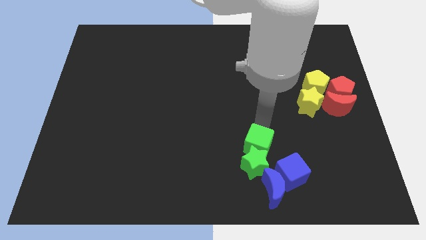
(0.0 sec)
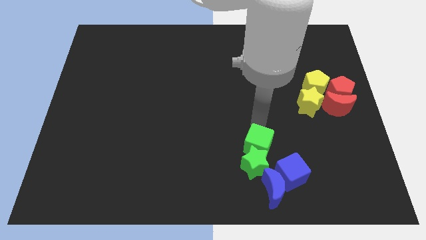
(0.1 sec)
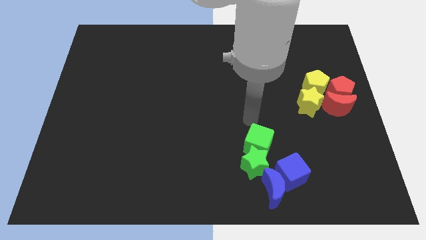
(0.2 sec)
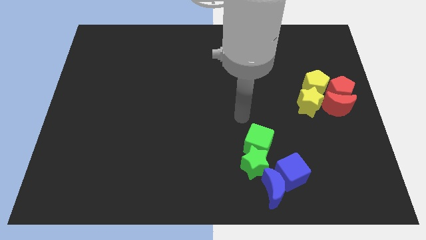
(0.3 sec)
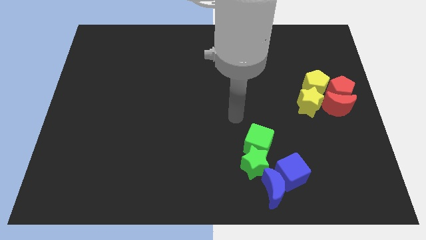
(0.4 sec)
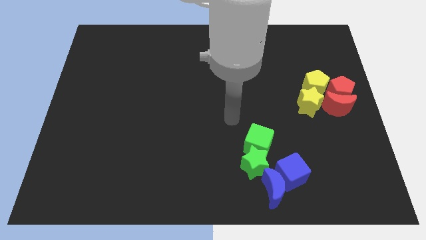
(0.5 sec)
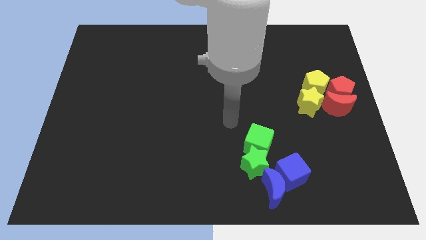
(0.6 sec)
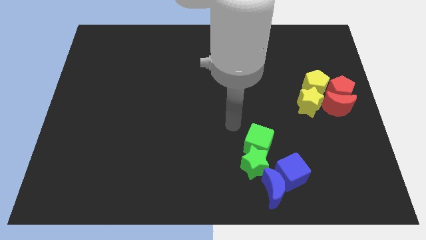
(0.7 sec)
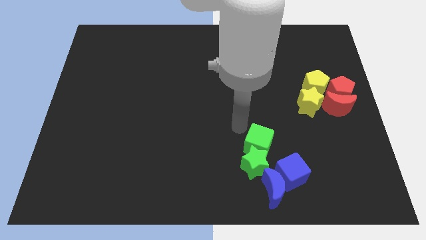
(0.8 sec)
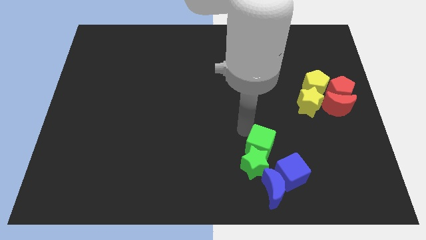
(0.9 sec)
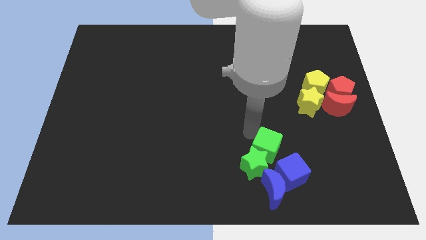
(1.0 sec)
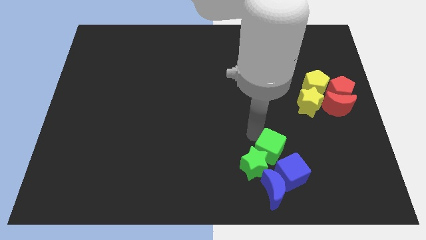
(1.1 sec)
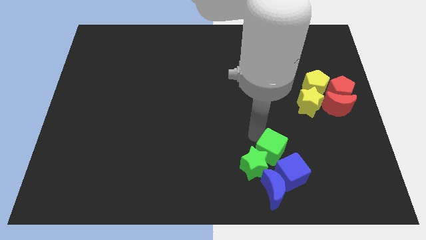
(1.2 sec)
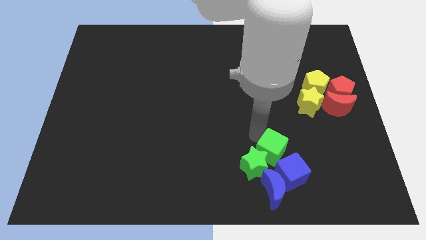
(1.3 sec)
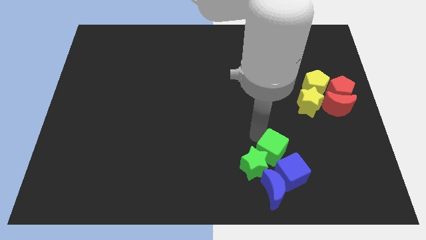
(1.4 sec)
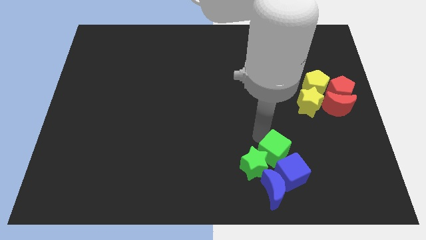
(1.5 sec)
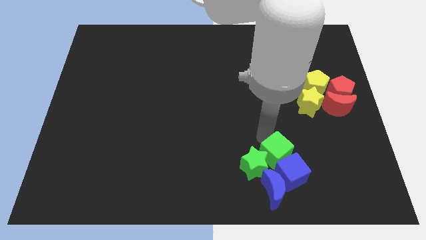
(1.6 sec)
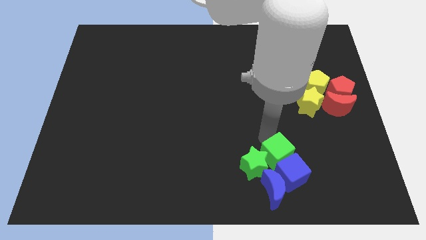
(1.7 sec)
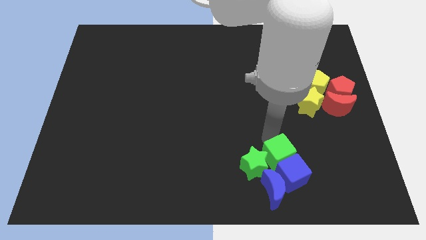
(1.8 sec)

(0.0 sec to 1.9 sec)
move the green cube into the blue cube

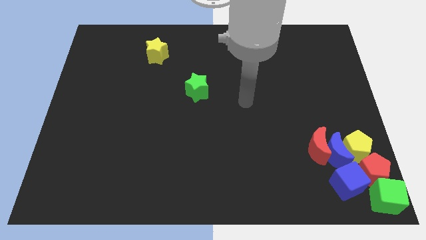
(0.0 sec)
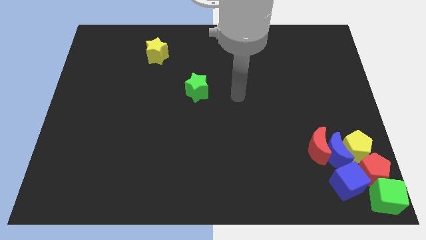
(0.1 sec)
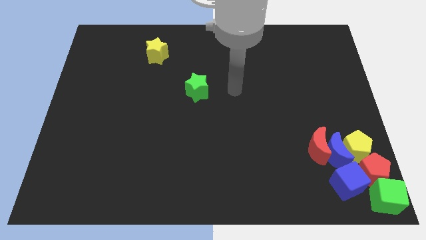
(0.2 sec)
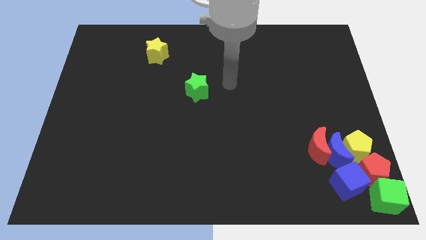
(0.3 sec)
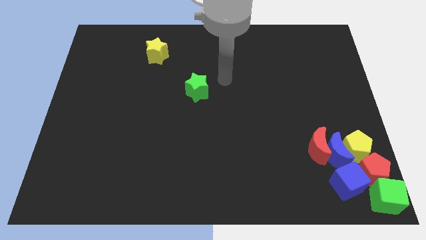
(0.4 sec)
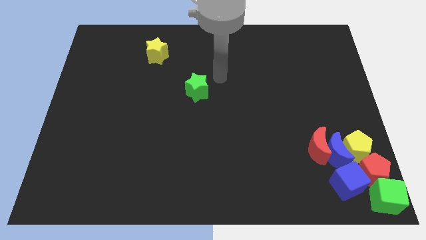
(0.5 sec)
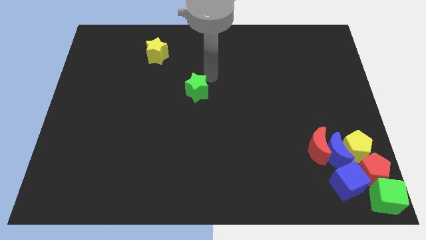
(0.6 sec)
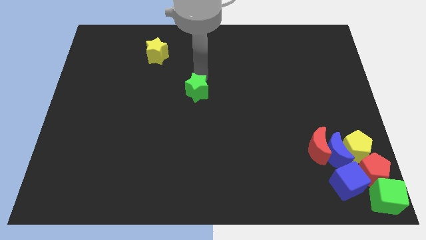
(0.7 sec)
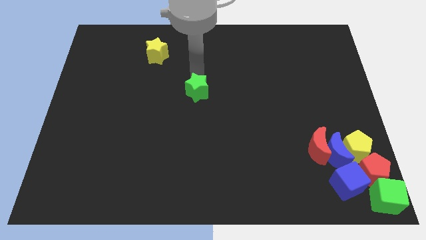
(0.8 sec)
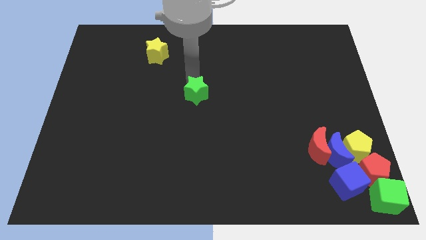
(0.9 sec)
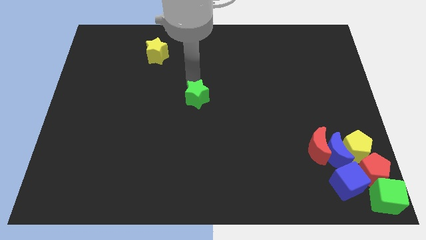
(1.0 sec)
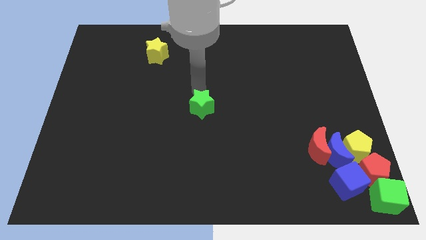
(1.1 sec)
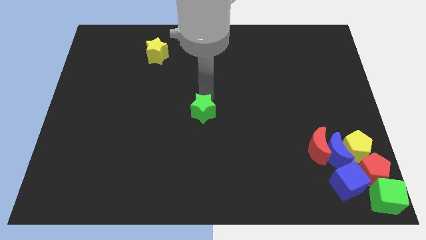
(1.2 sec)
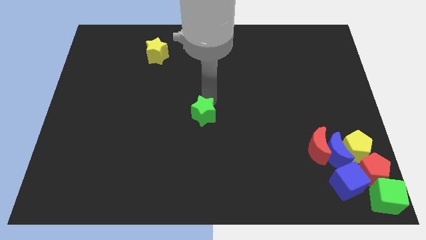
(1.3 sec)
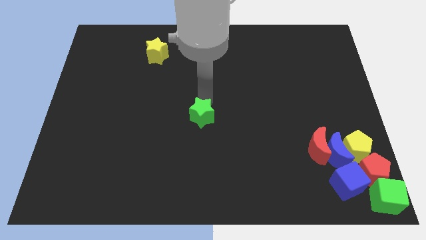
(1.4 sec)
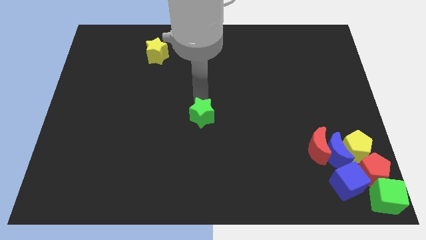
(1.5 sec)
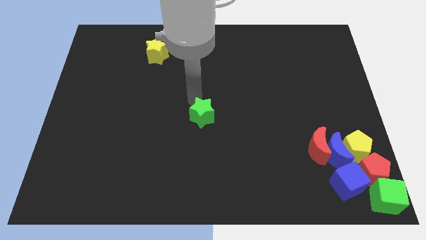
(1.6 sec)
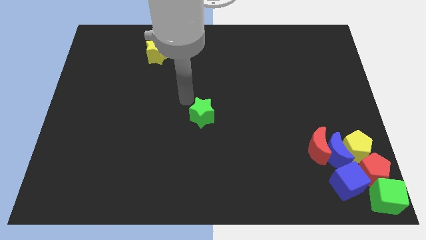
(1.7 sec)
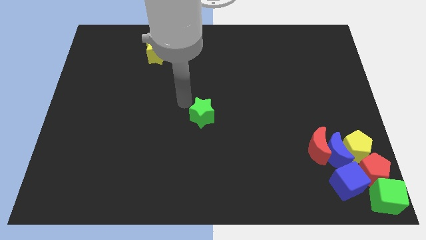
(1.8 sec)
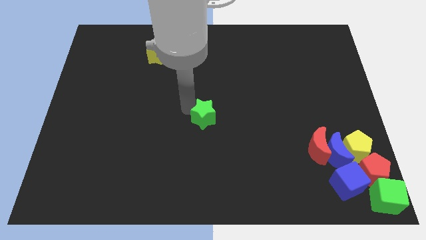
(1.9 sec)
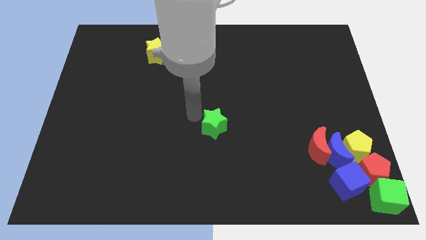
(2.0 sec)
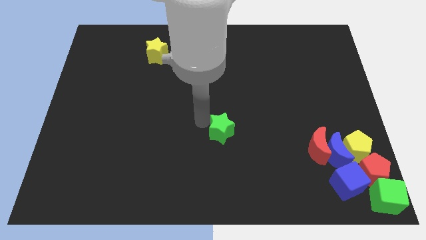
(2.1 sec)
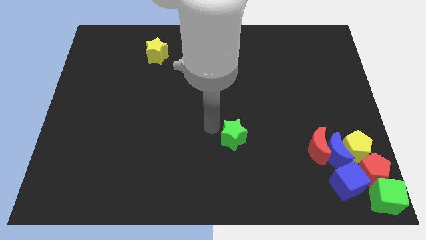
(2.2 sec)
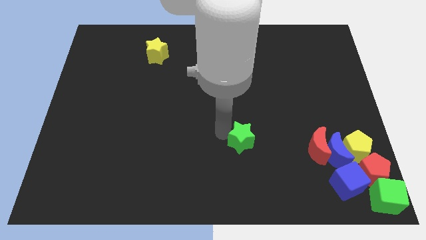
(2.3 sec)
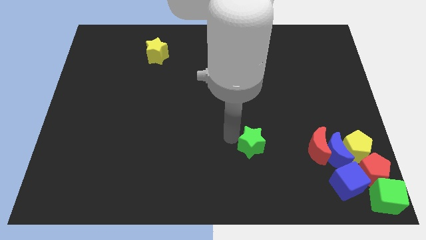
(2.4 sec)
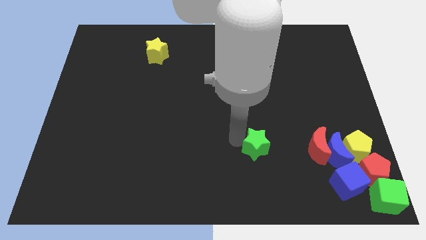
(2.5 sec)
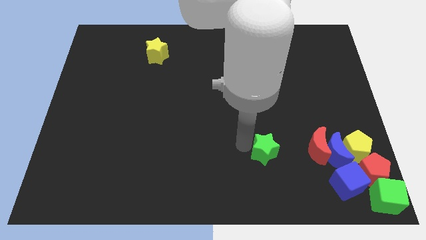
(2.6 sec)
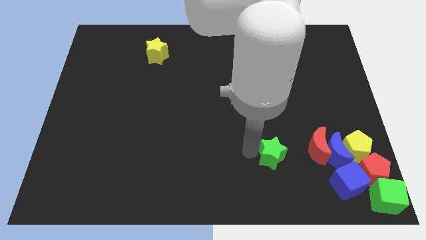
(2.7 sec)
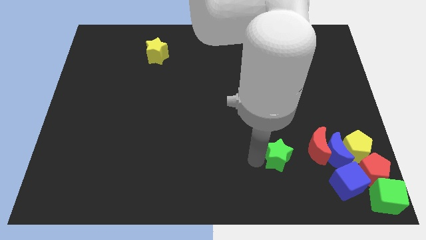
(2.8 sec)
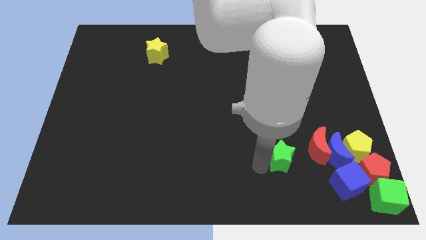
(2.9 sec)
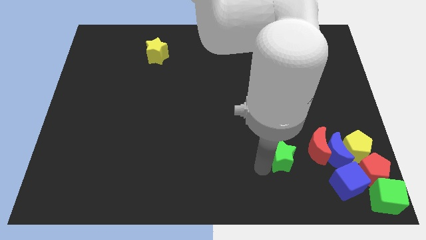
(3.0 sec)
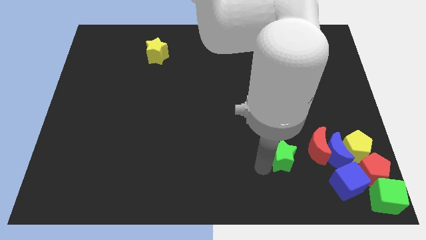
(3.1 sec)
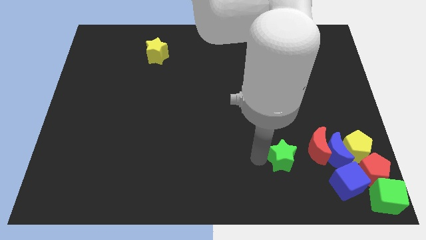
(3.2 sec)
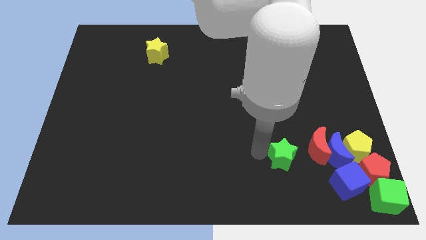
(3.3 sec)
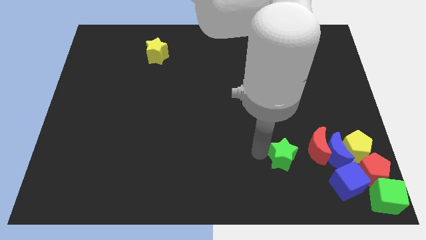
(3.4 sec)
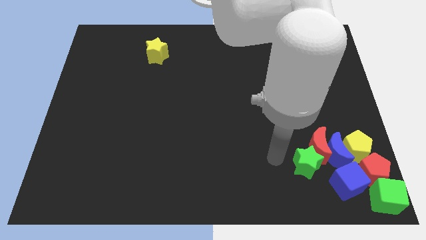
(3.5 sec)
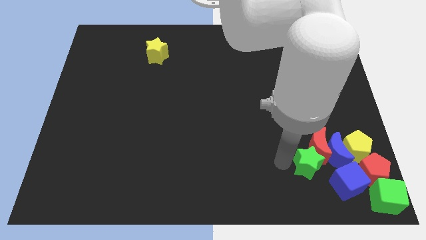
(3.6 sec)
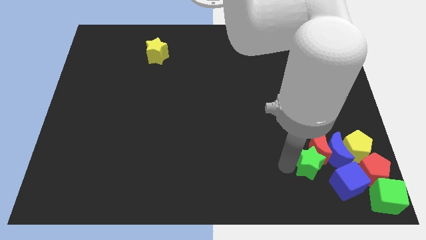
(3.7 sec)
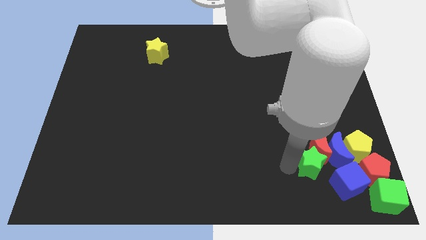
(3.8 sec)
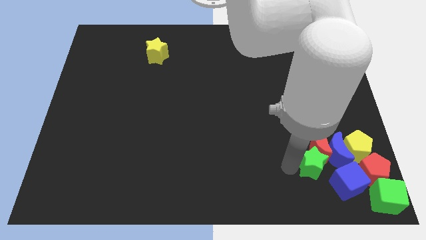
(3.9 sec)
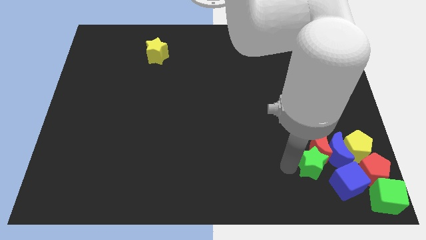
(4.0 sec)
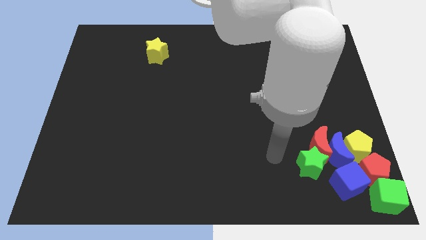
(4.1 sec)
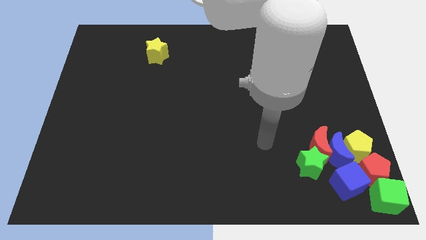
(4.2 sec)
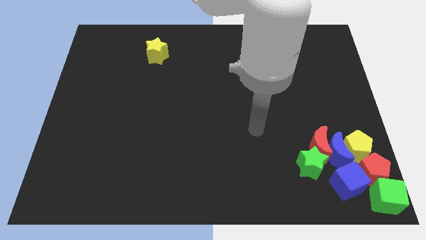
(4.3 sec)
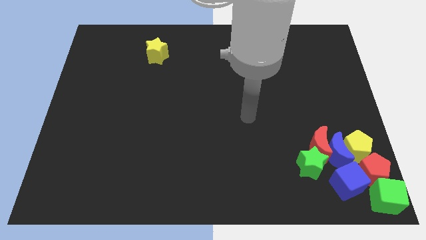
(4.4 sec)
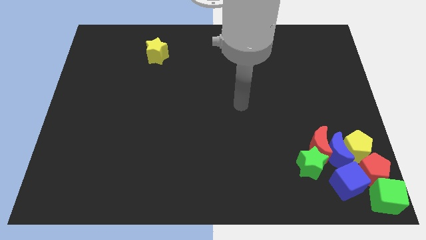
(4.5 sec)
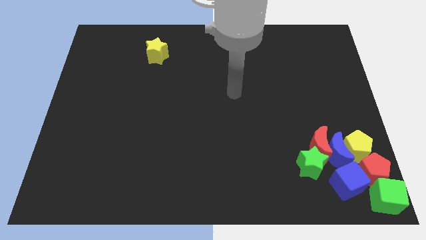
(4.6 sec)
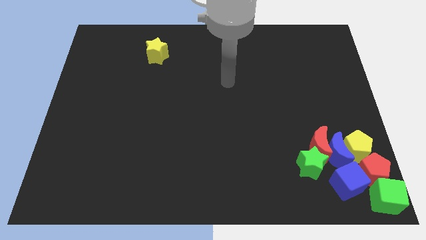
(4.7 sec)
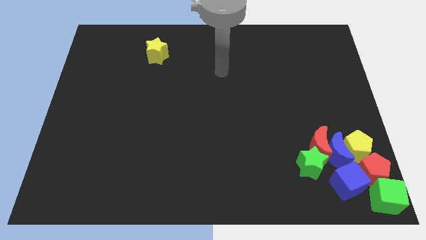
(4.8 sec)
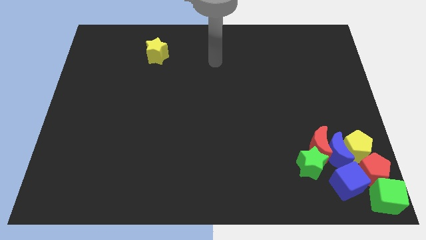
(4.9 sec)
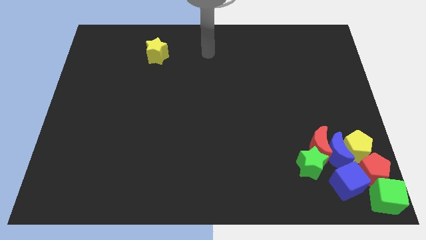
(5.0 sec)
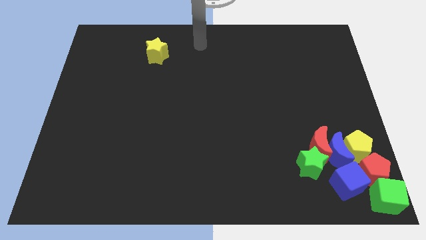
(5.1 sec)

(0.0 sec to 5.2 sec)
move the green star towards the group of blocks

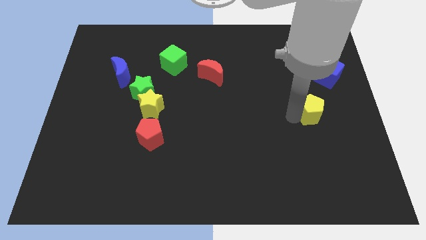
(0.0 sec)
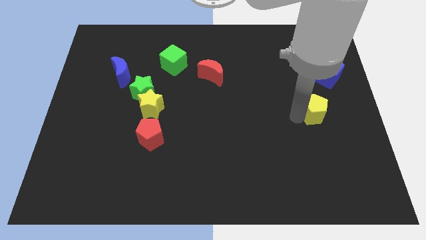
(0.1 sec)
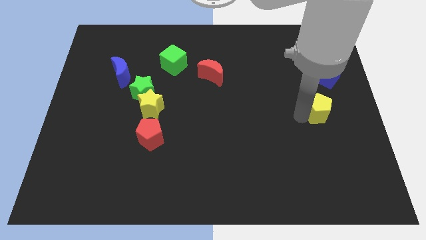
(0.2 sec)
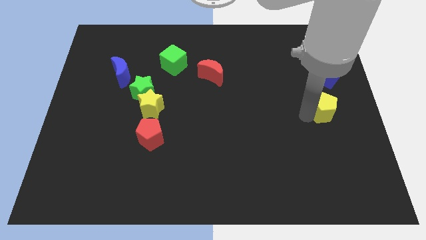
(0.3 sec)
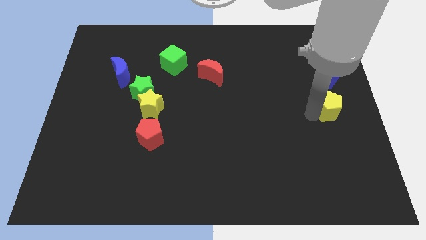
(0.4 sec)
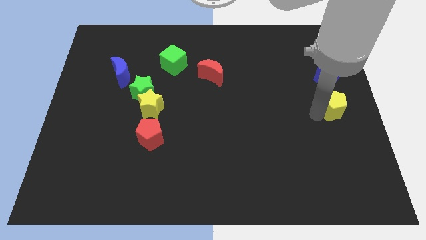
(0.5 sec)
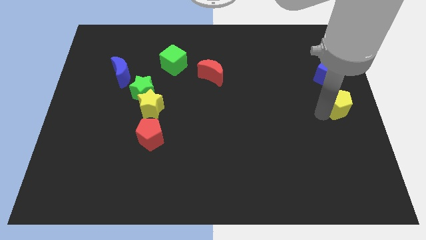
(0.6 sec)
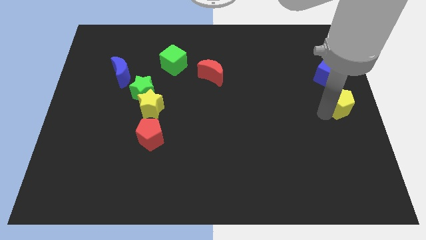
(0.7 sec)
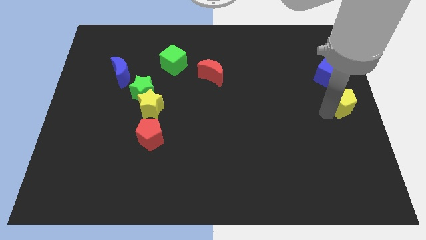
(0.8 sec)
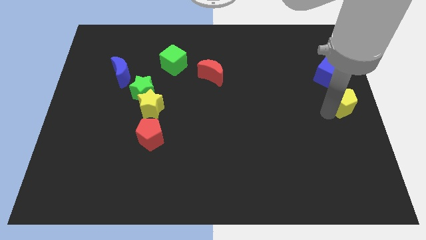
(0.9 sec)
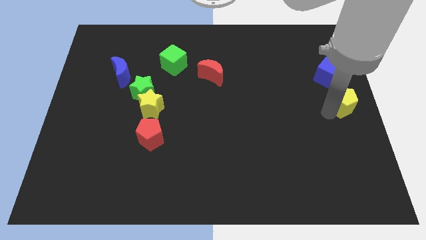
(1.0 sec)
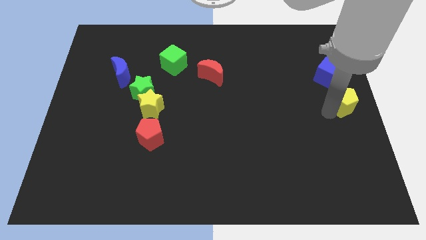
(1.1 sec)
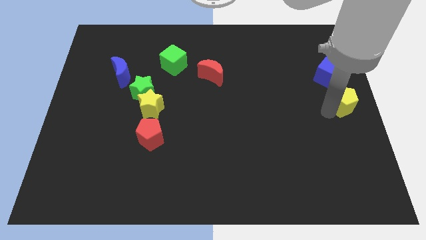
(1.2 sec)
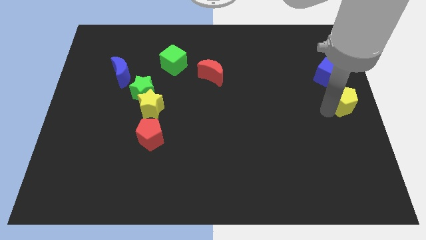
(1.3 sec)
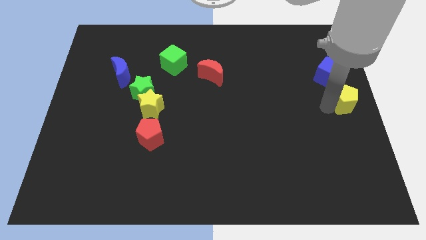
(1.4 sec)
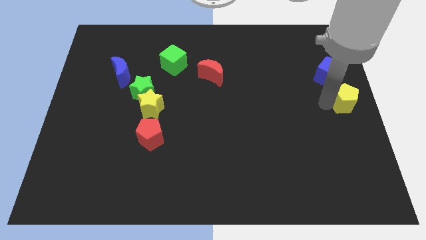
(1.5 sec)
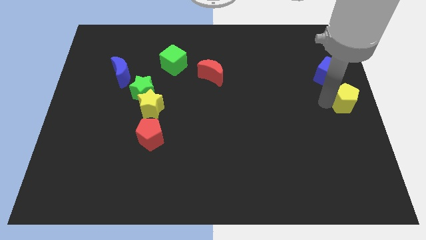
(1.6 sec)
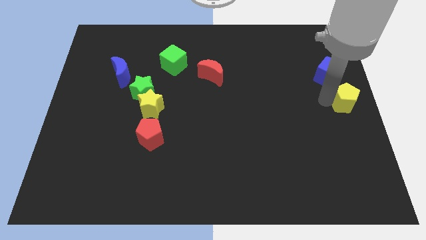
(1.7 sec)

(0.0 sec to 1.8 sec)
push the yellow pentagon towards the right center
